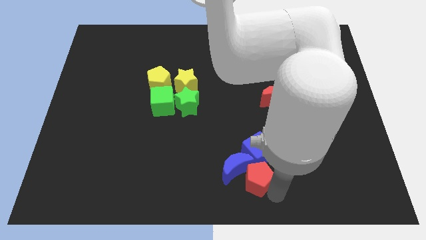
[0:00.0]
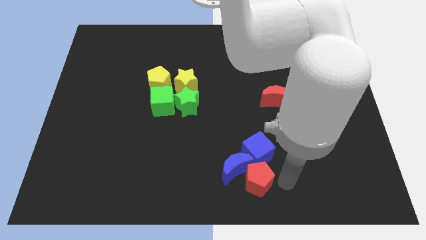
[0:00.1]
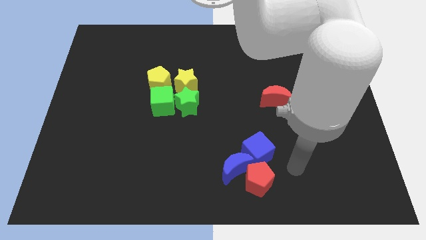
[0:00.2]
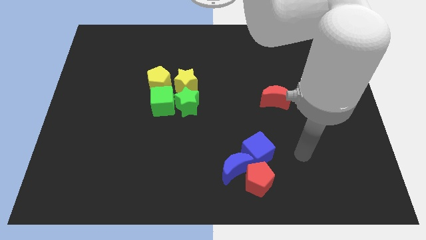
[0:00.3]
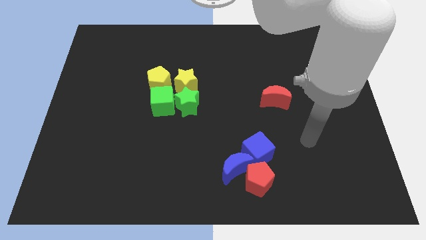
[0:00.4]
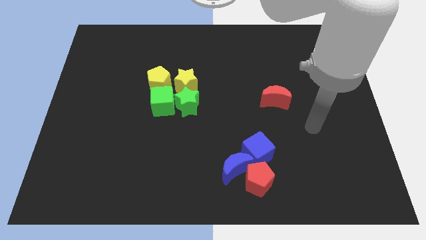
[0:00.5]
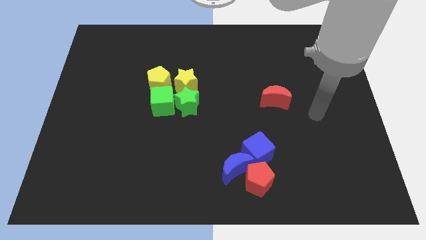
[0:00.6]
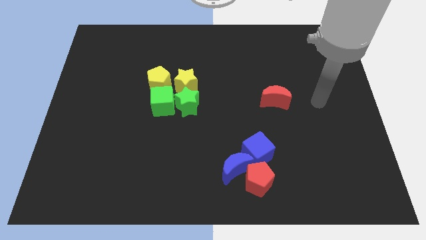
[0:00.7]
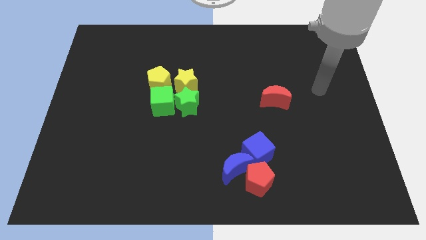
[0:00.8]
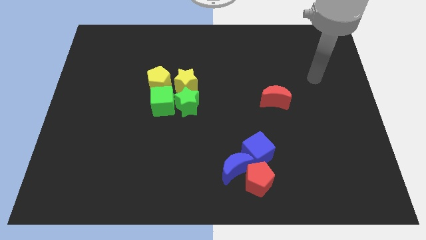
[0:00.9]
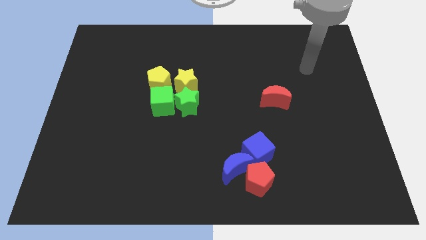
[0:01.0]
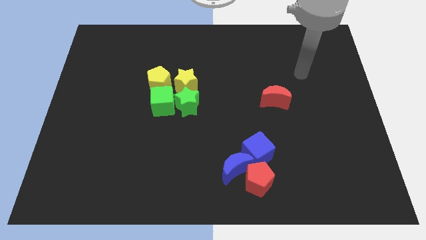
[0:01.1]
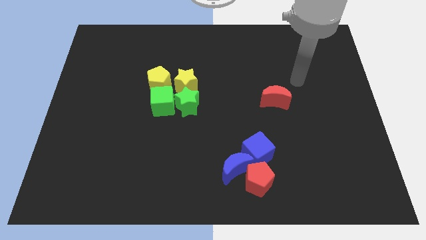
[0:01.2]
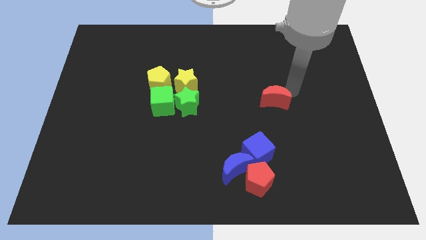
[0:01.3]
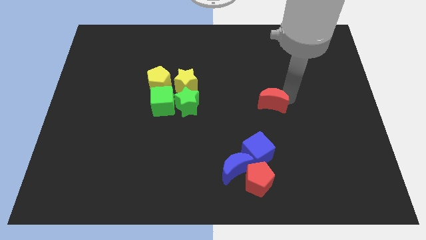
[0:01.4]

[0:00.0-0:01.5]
push the red block slightly

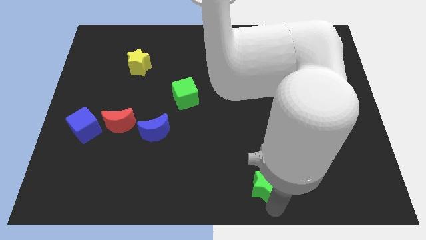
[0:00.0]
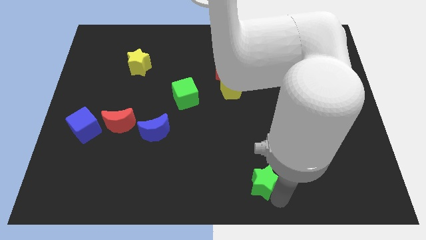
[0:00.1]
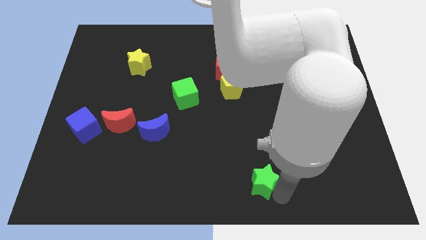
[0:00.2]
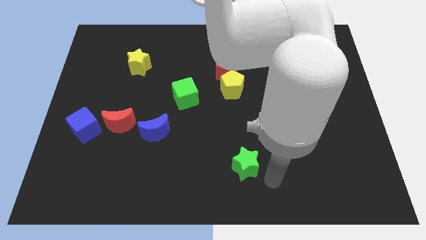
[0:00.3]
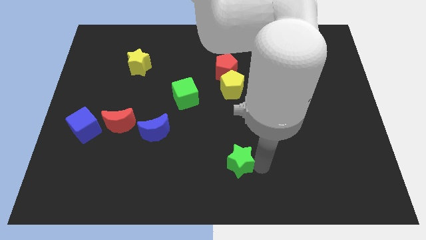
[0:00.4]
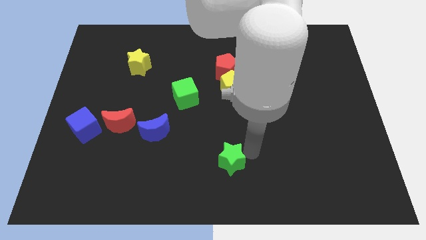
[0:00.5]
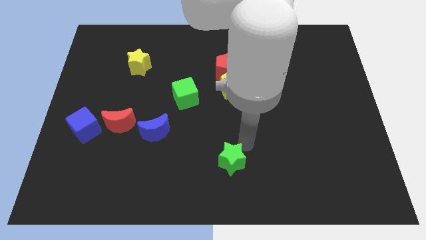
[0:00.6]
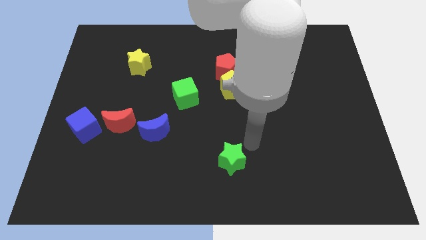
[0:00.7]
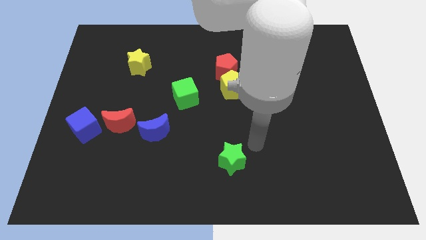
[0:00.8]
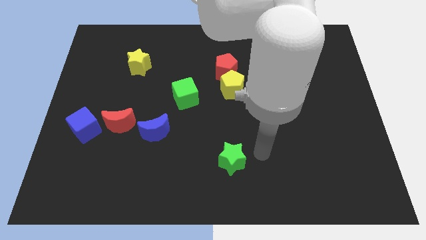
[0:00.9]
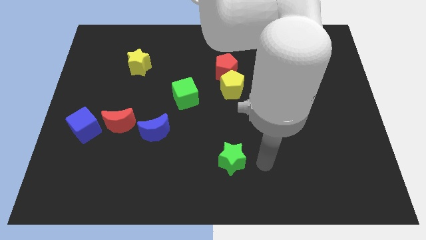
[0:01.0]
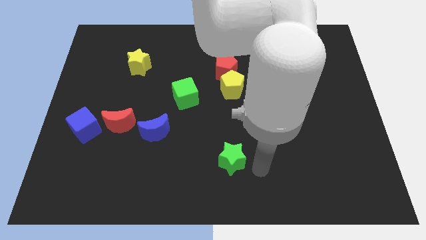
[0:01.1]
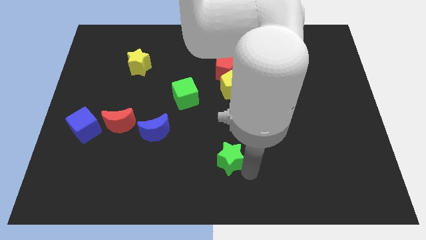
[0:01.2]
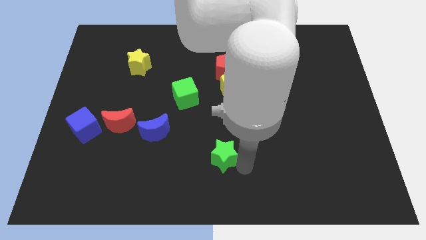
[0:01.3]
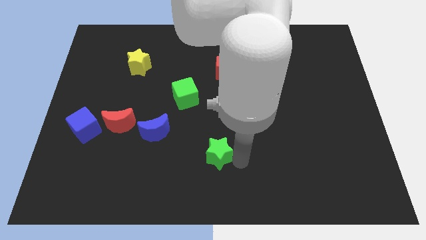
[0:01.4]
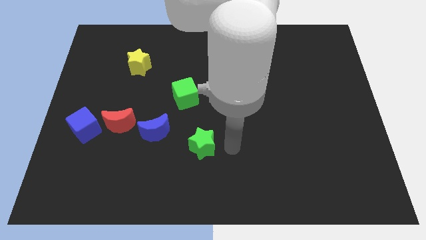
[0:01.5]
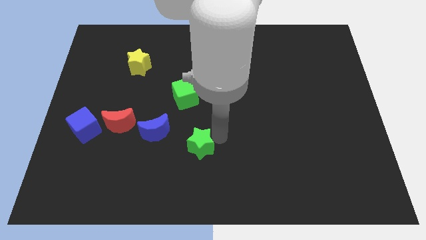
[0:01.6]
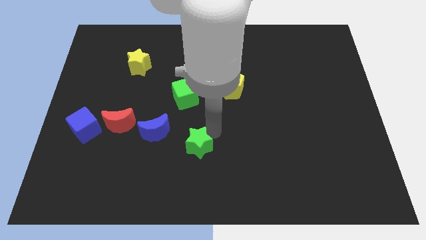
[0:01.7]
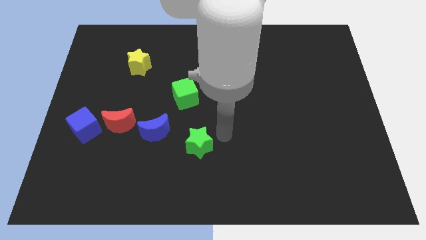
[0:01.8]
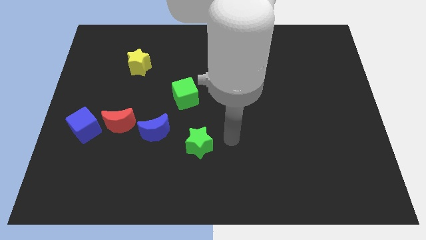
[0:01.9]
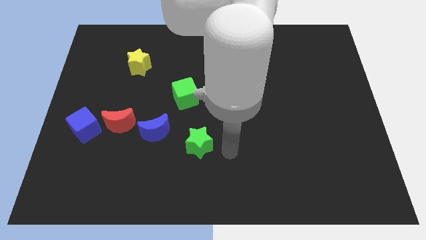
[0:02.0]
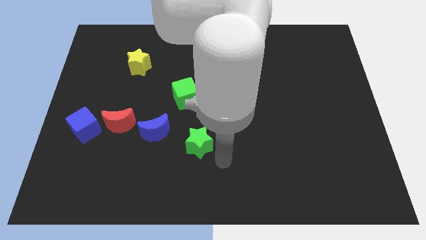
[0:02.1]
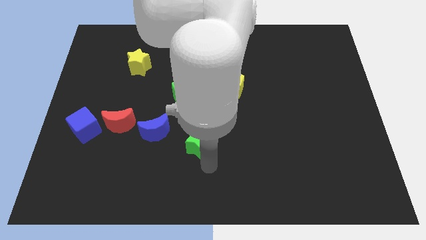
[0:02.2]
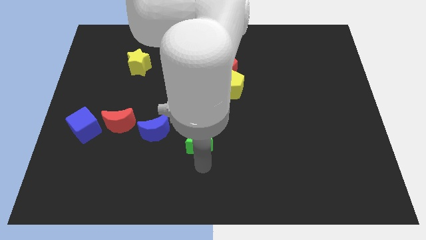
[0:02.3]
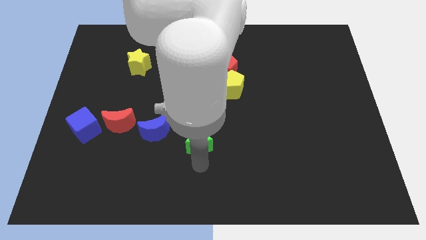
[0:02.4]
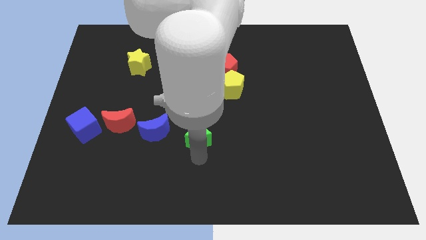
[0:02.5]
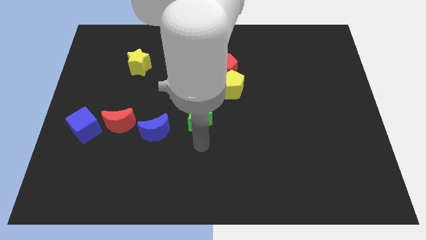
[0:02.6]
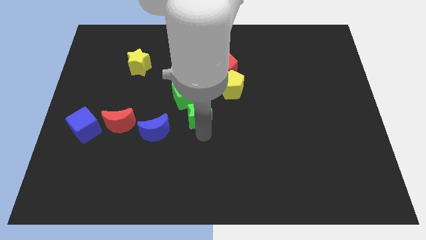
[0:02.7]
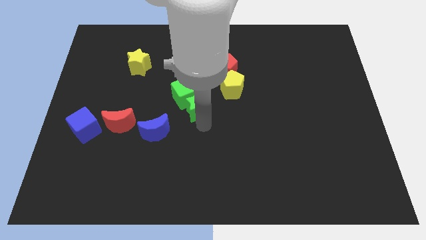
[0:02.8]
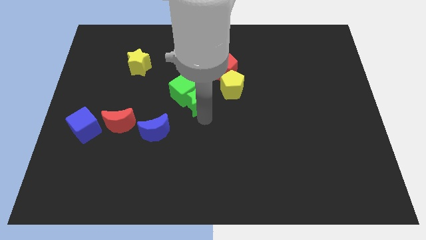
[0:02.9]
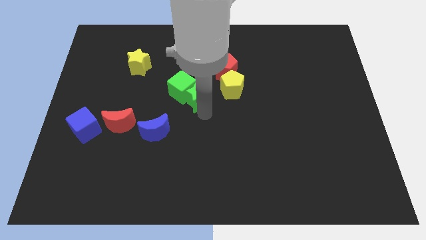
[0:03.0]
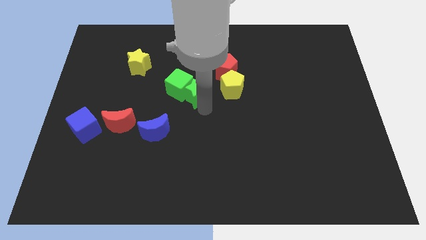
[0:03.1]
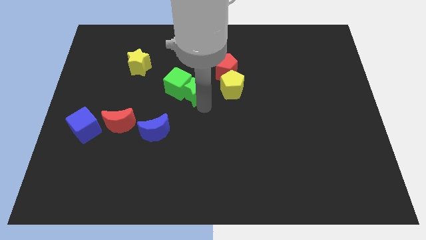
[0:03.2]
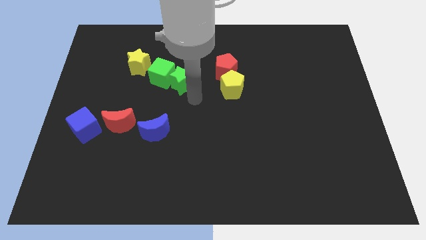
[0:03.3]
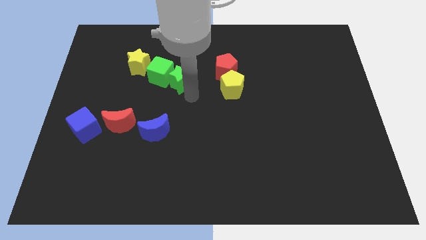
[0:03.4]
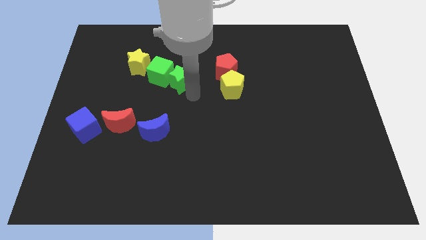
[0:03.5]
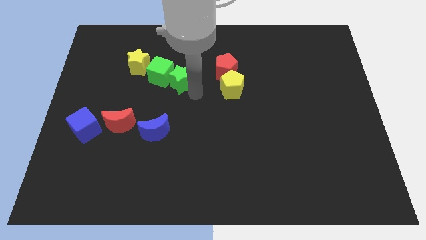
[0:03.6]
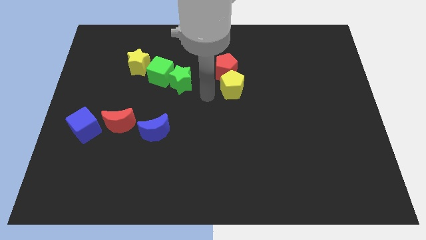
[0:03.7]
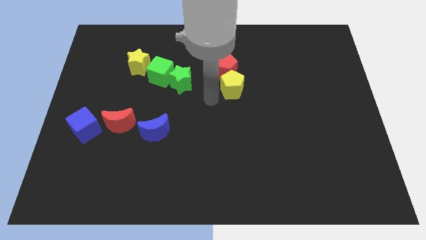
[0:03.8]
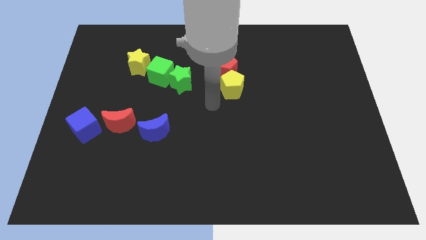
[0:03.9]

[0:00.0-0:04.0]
push the green blocks into the yellow star

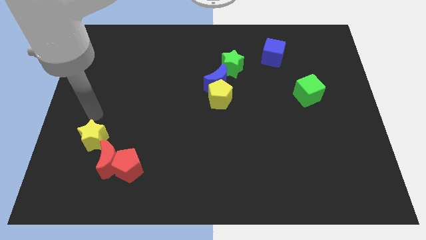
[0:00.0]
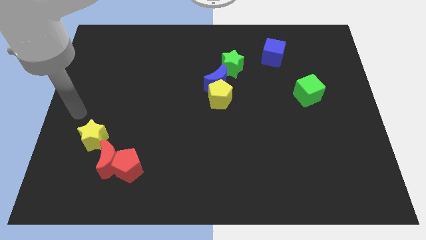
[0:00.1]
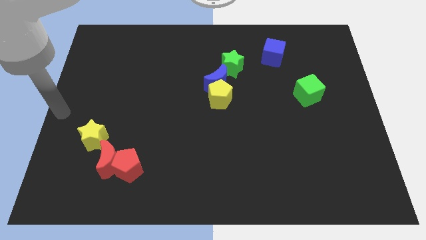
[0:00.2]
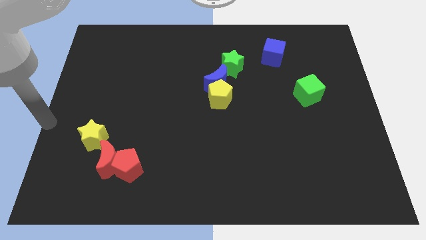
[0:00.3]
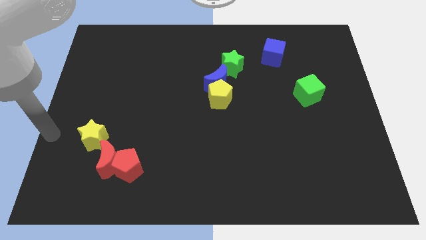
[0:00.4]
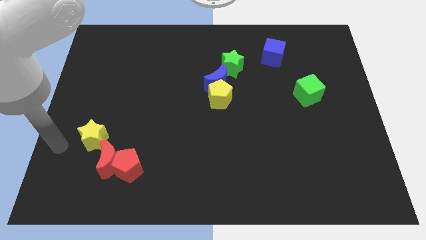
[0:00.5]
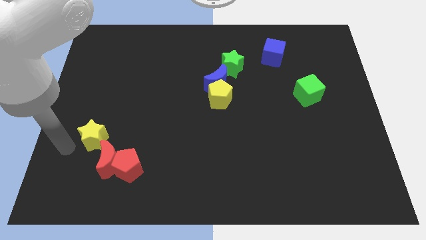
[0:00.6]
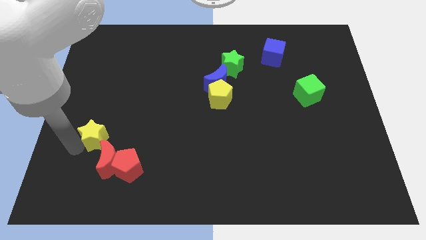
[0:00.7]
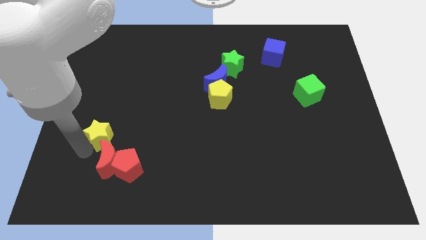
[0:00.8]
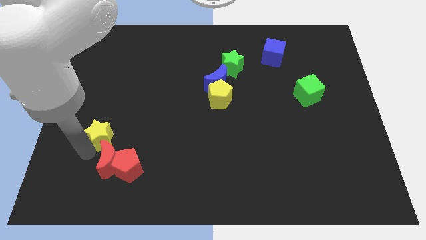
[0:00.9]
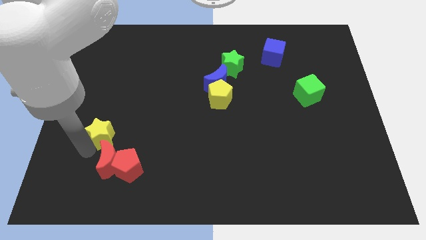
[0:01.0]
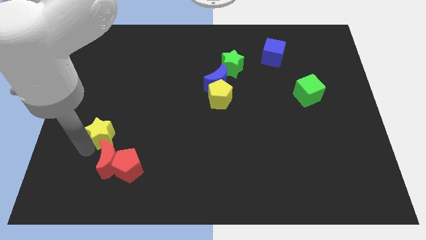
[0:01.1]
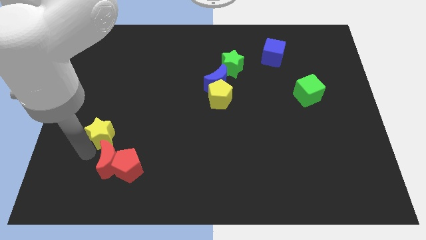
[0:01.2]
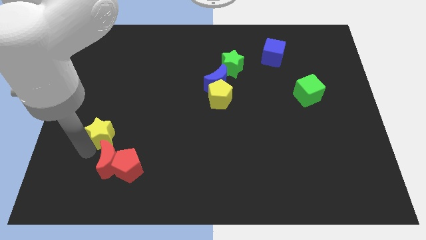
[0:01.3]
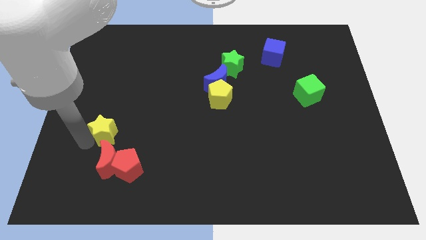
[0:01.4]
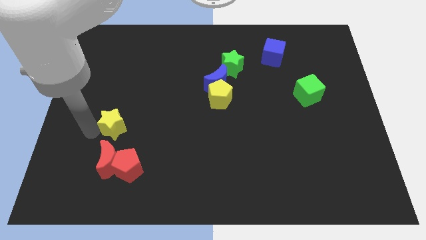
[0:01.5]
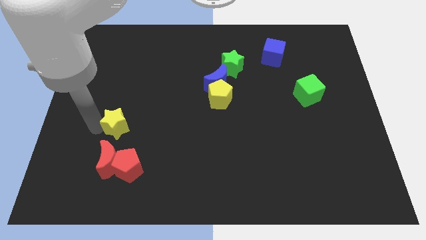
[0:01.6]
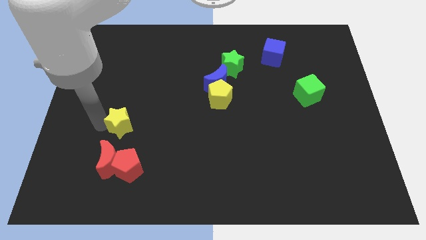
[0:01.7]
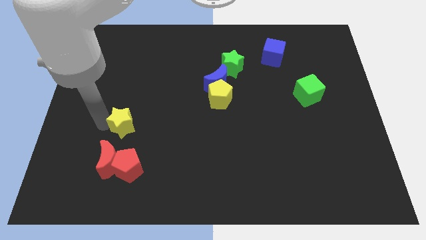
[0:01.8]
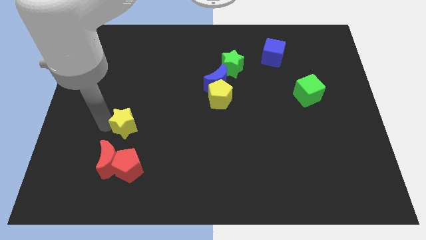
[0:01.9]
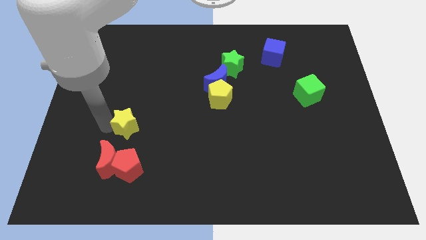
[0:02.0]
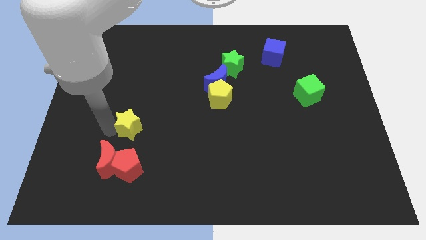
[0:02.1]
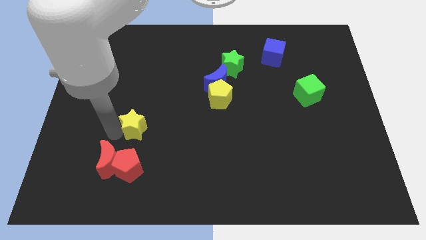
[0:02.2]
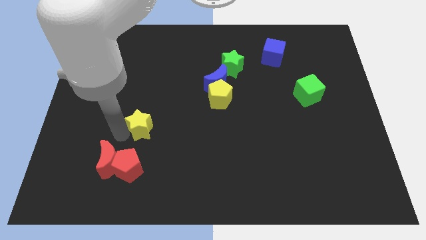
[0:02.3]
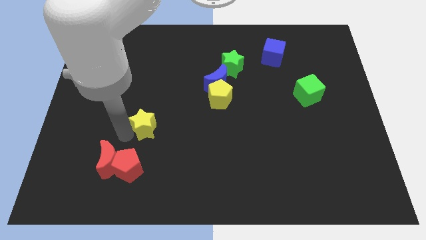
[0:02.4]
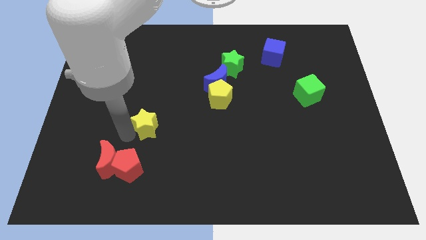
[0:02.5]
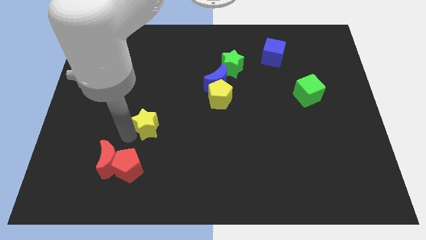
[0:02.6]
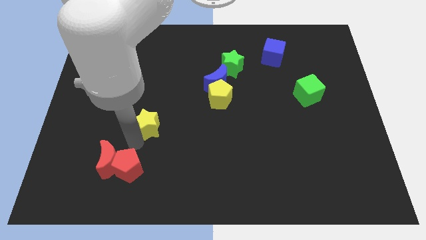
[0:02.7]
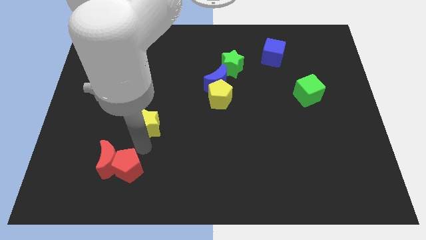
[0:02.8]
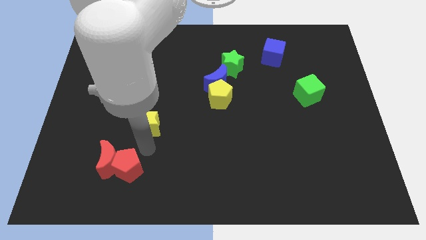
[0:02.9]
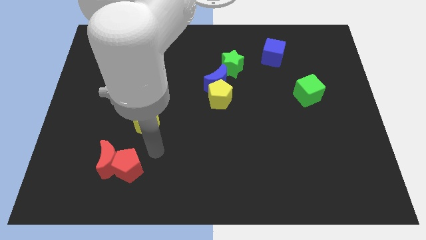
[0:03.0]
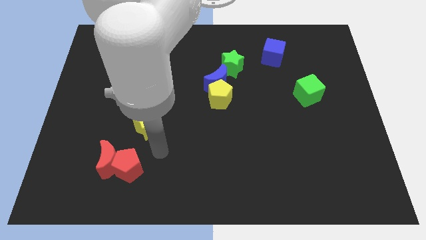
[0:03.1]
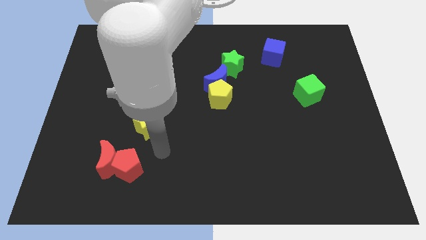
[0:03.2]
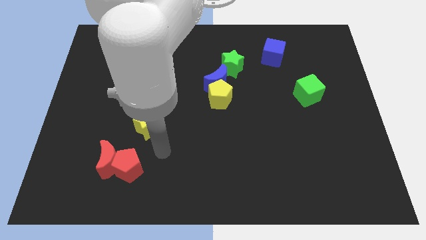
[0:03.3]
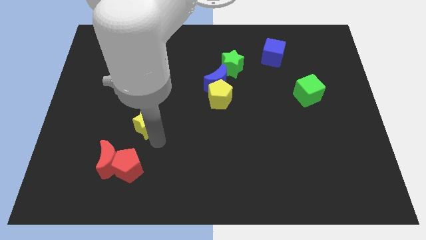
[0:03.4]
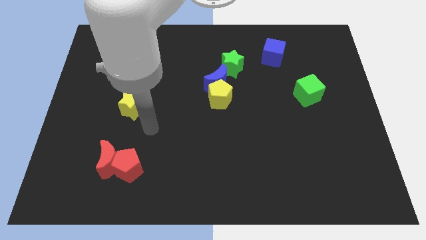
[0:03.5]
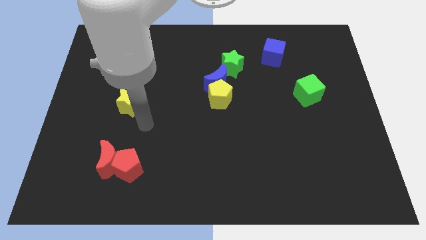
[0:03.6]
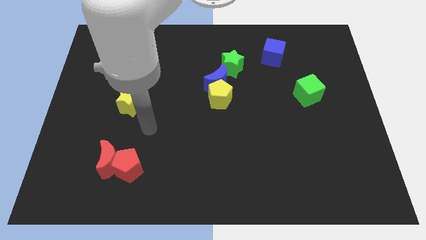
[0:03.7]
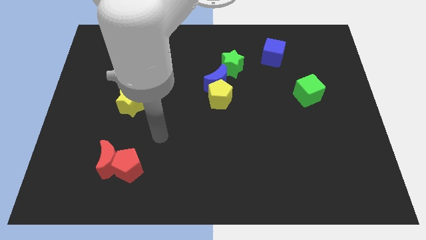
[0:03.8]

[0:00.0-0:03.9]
move the yellow star vertically above the red blocks
